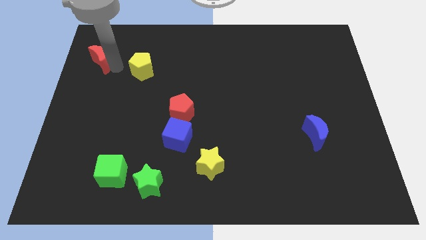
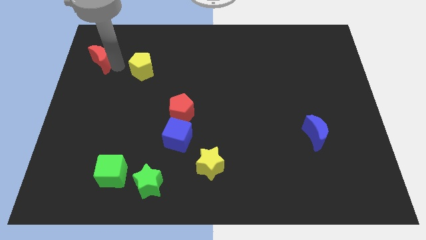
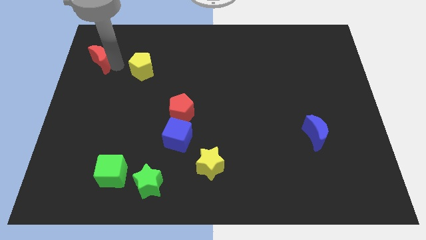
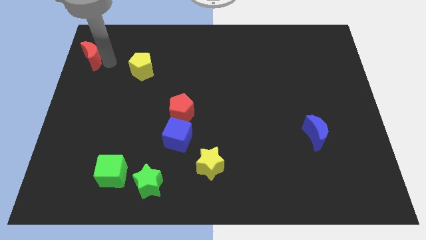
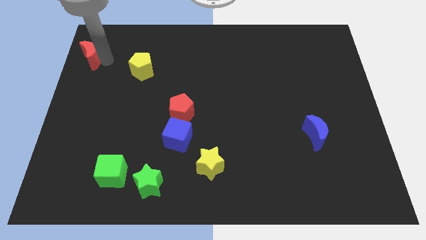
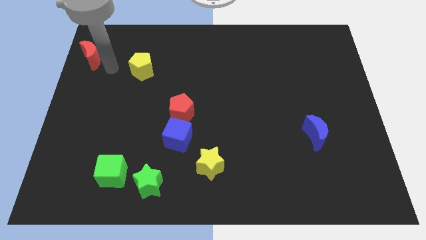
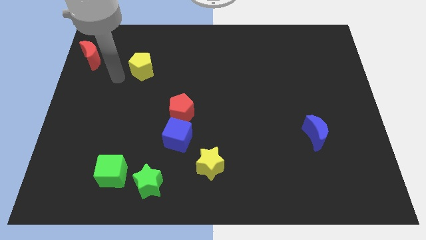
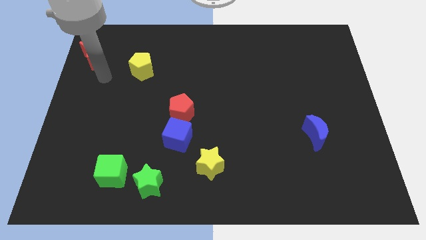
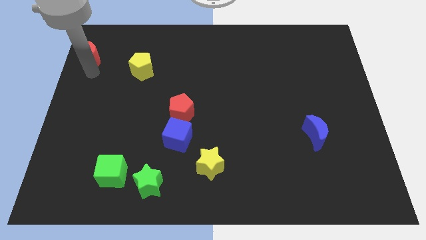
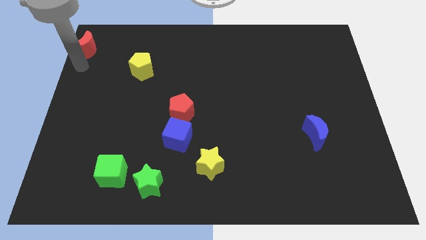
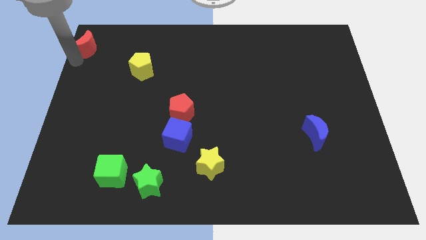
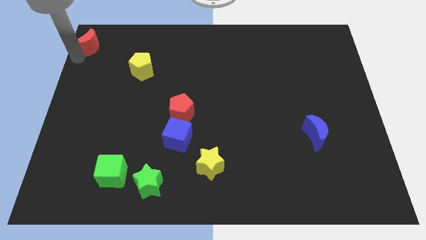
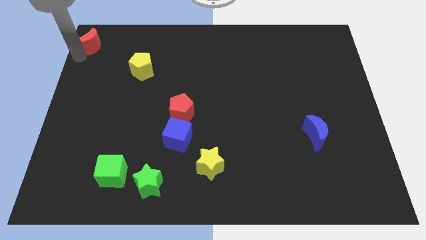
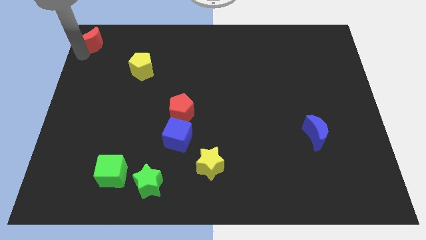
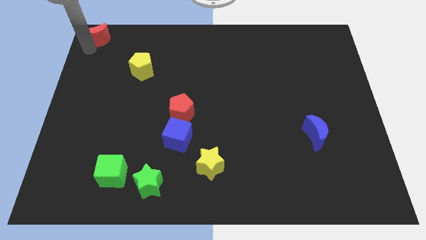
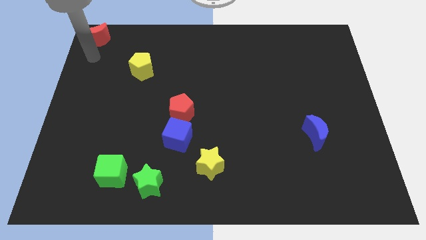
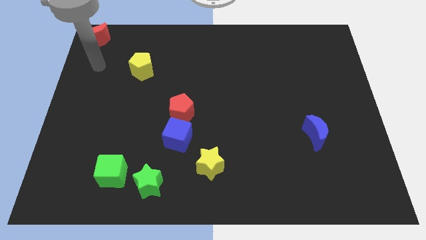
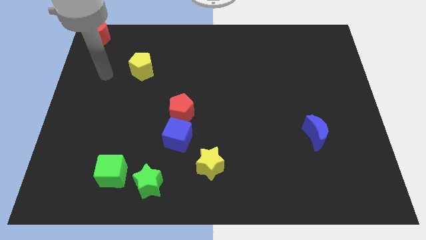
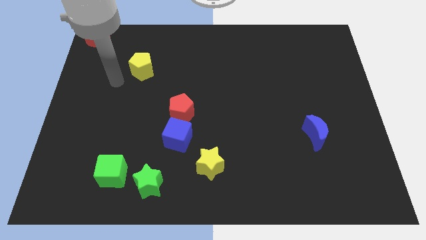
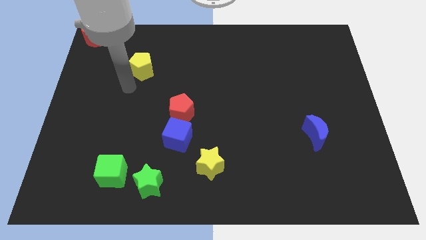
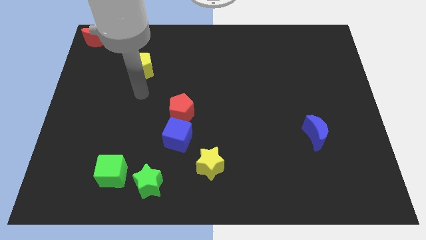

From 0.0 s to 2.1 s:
push red moon to the top left

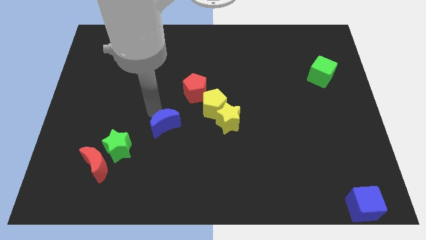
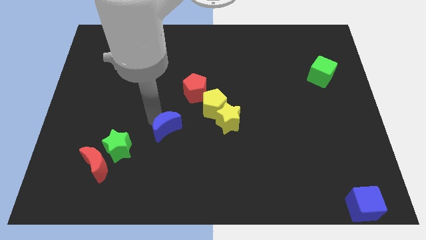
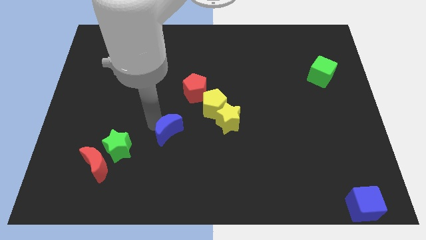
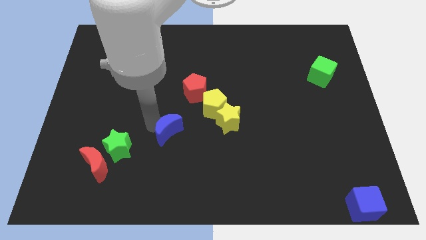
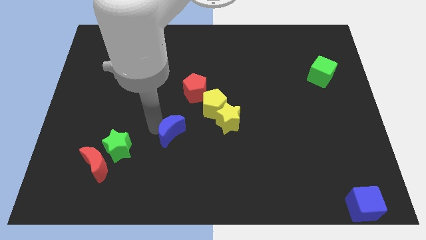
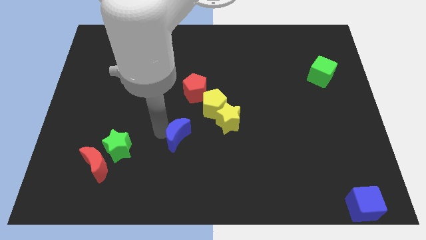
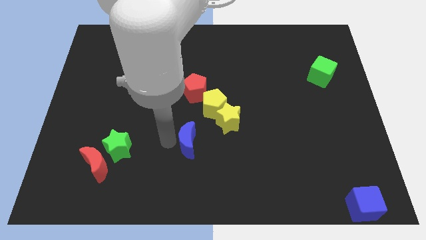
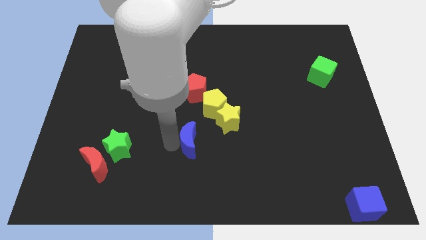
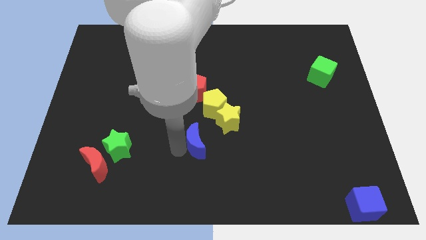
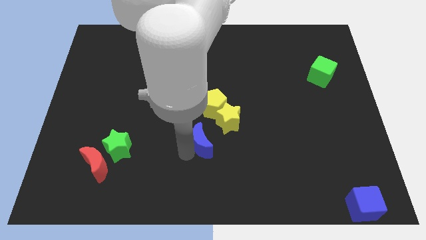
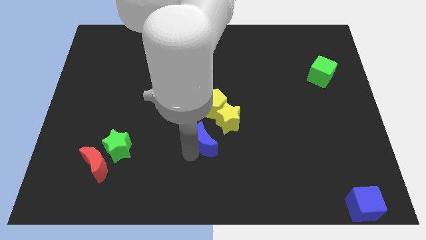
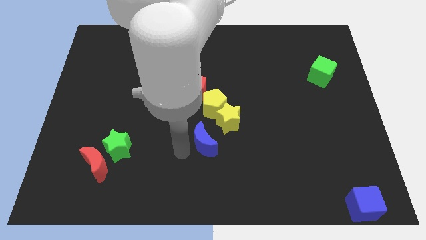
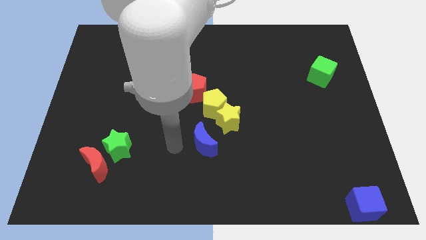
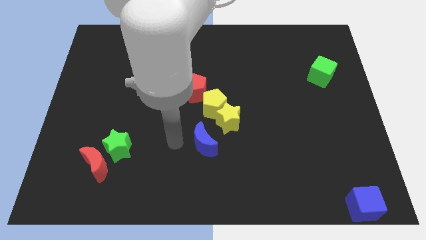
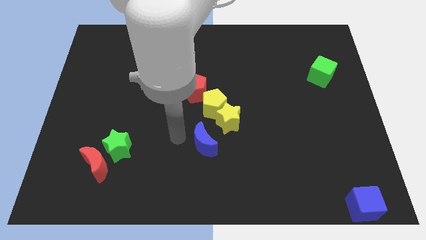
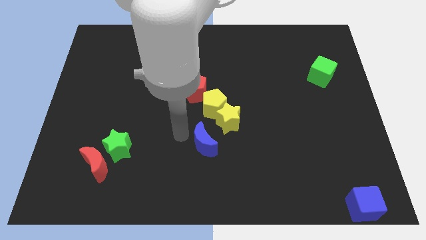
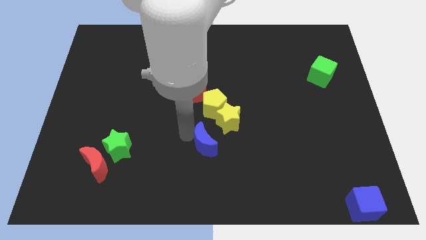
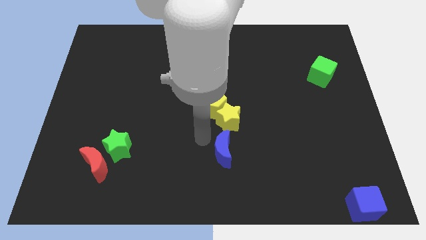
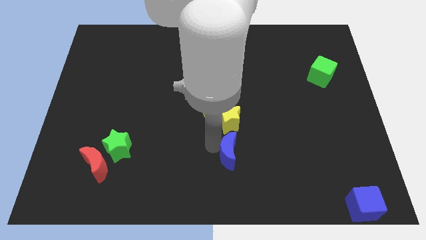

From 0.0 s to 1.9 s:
push the blue crescent to the bottom of the yellow star

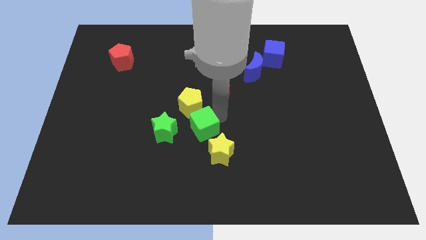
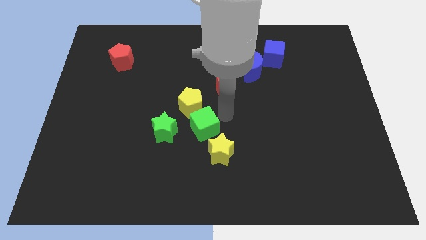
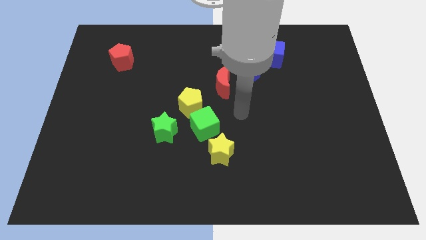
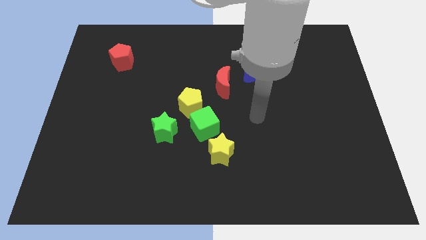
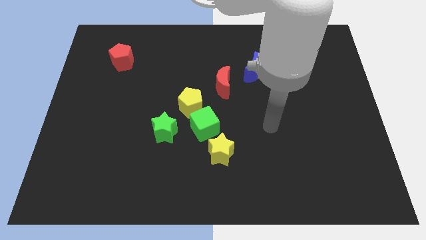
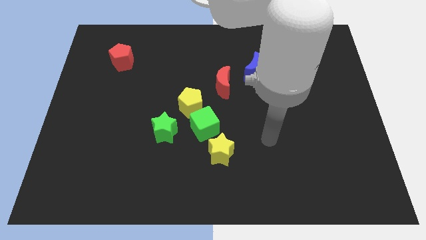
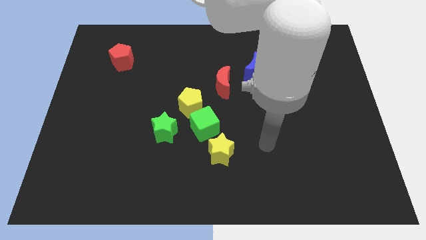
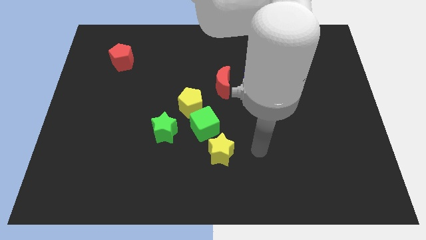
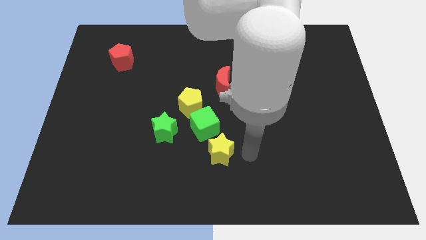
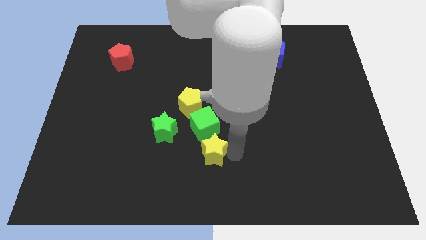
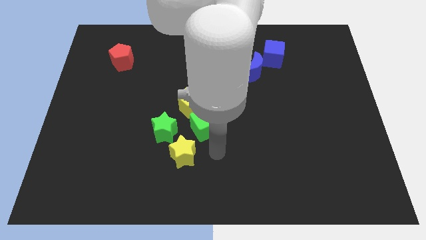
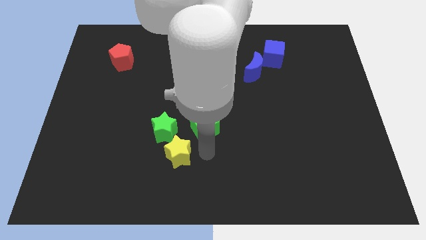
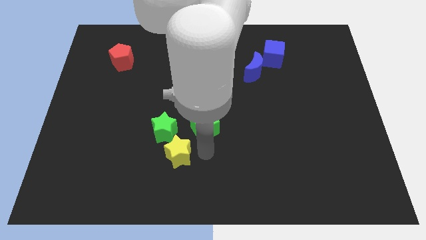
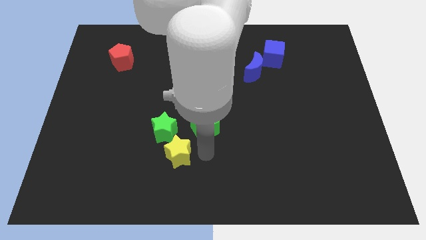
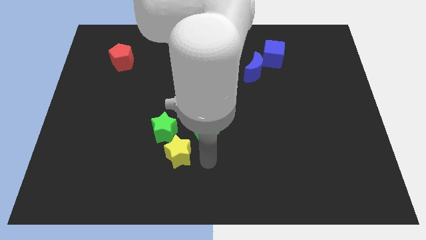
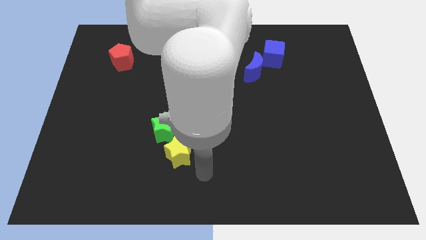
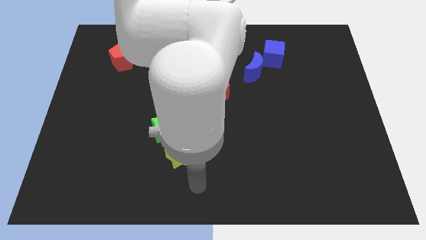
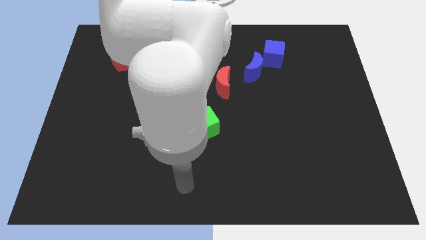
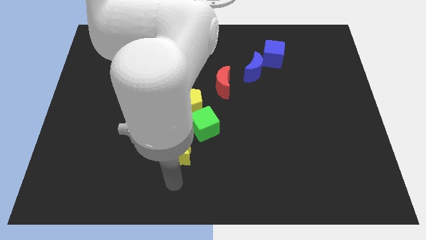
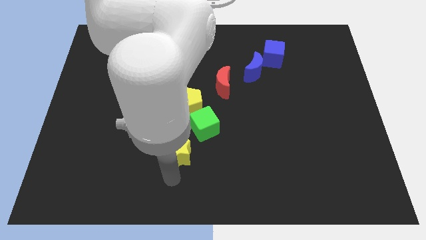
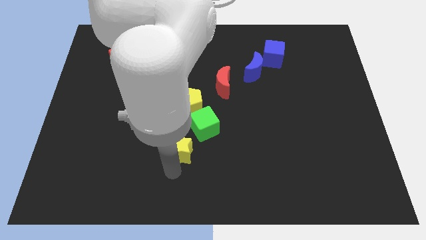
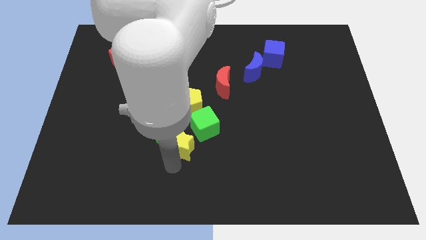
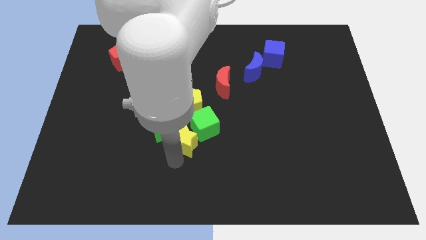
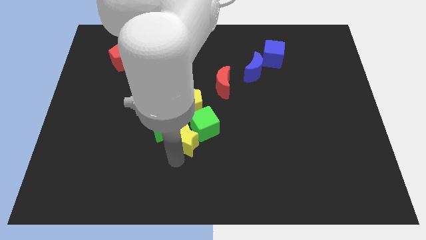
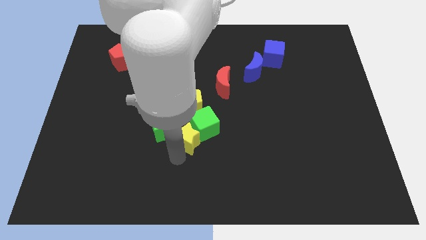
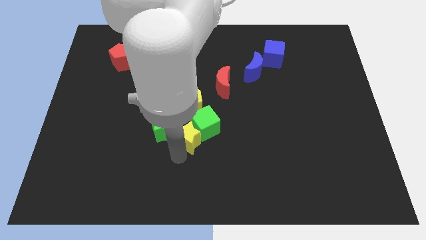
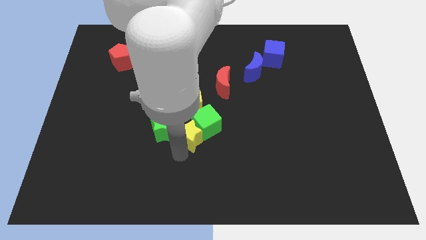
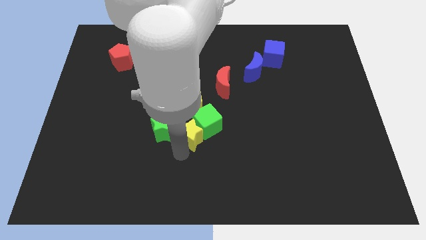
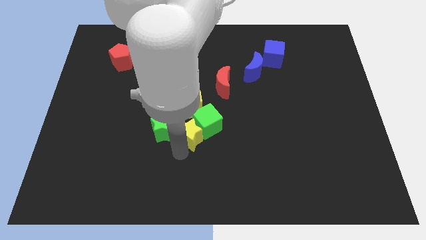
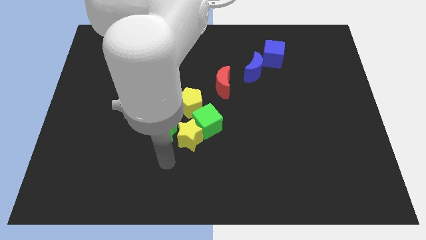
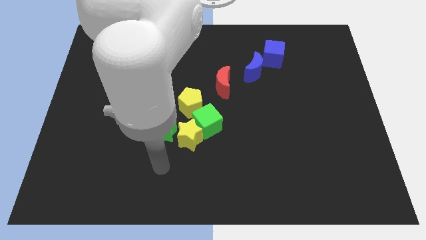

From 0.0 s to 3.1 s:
move yellow star to the left of green cube

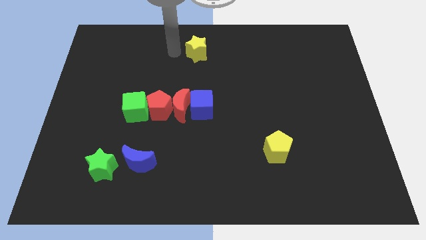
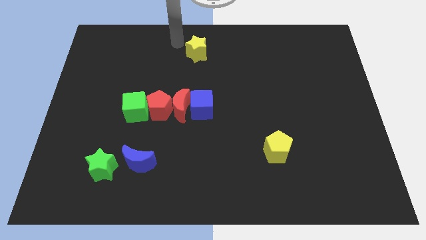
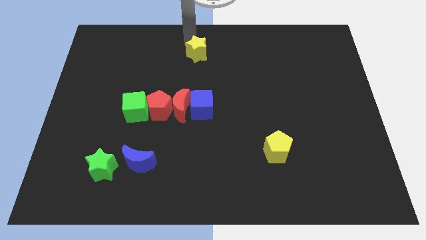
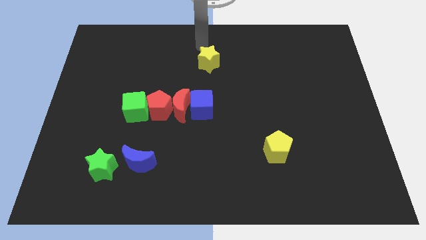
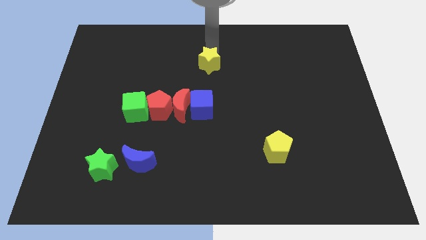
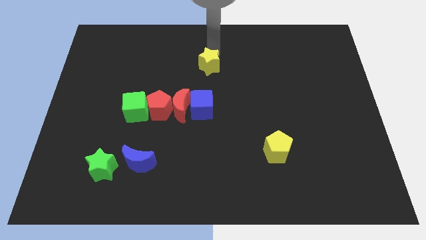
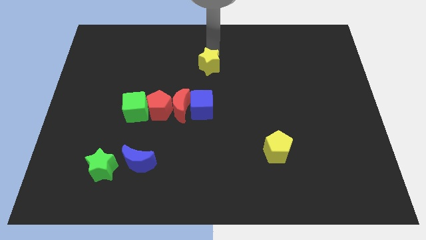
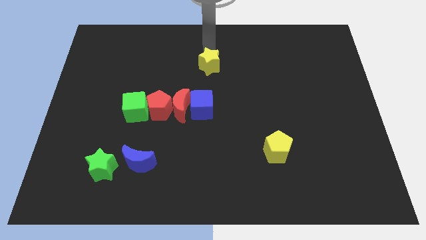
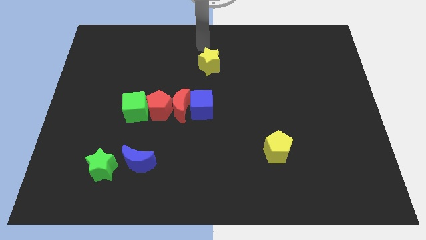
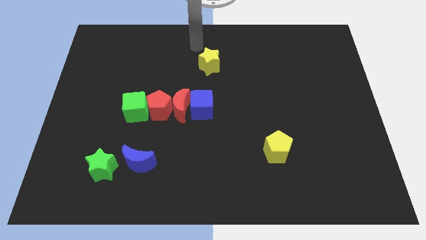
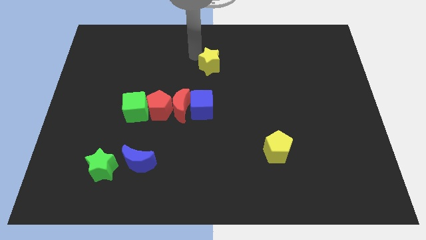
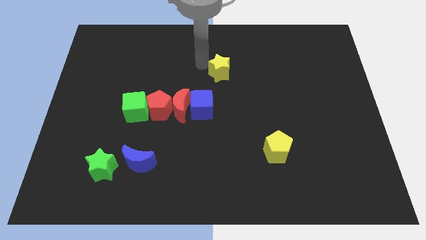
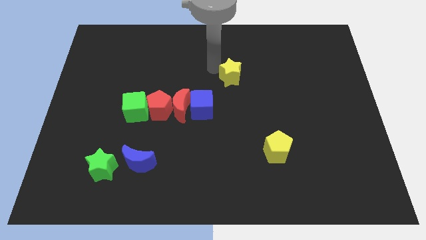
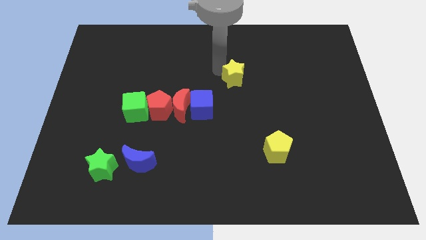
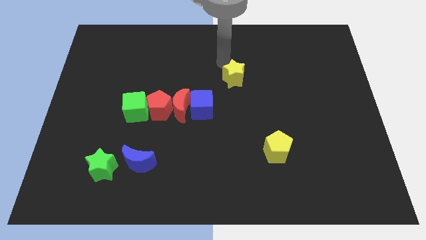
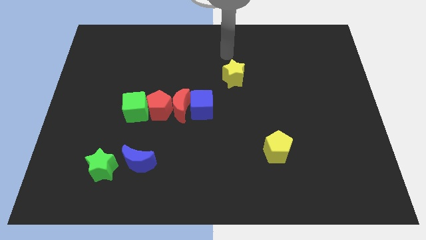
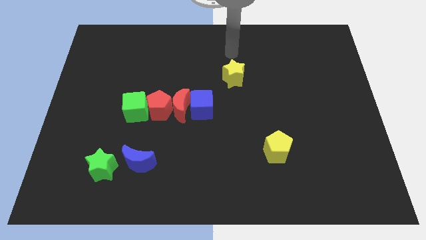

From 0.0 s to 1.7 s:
move the yellow star diagonally on the top right side of the blue cube

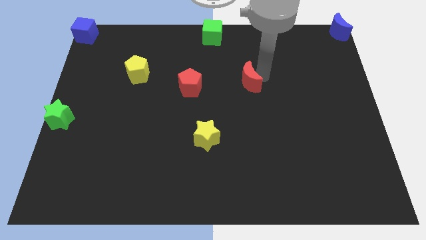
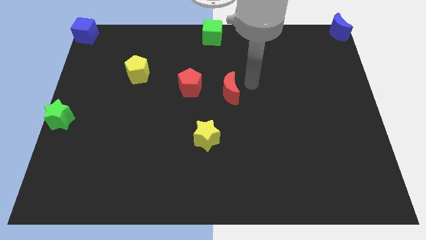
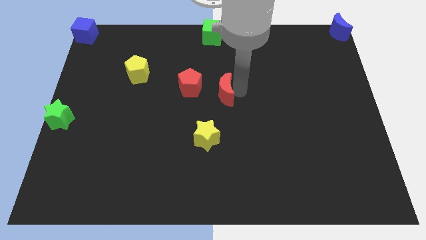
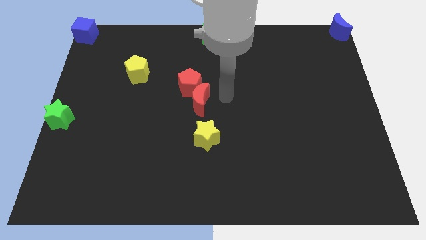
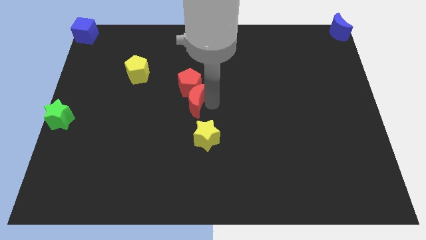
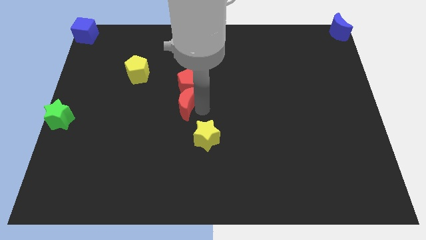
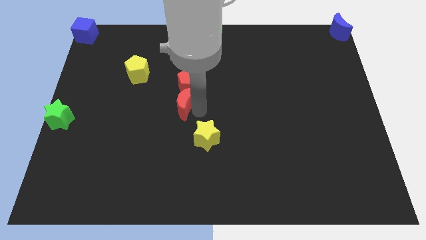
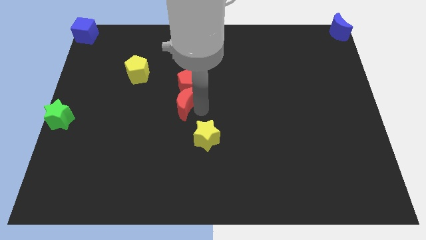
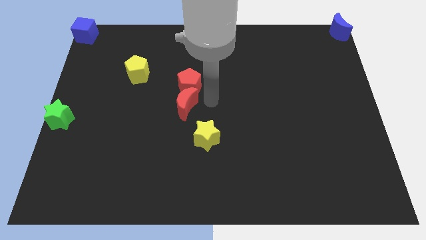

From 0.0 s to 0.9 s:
place the red crescent below the red pentagon
